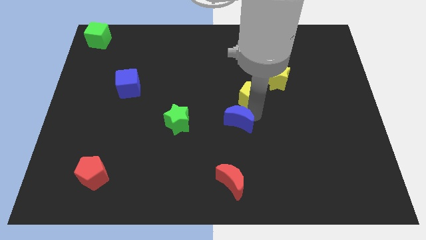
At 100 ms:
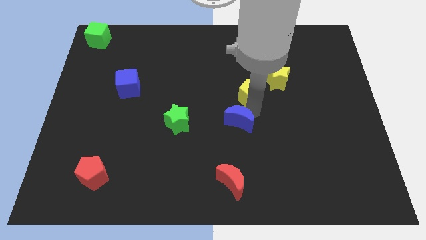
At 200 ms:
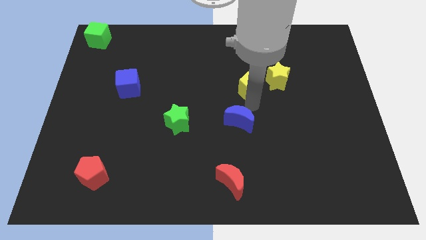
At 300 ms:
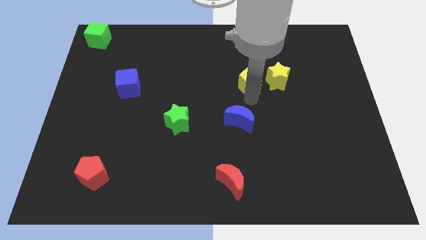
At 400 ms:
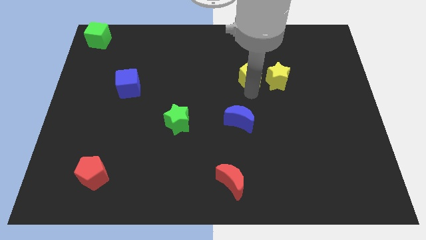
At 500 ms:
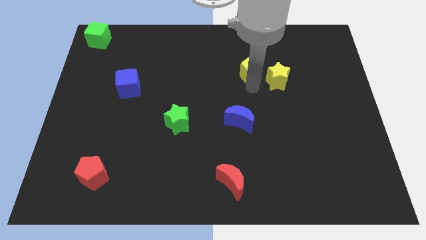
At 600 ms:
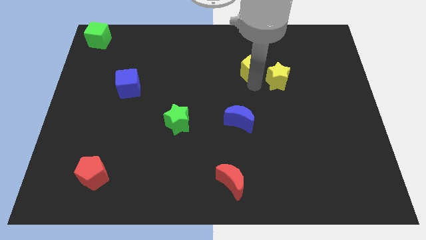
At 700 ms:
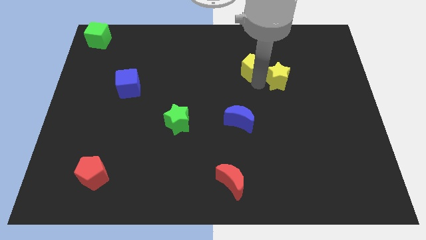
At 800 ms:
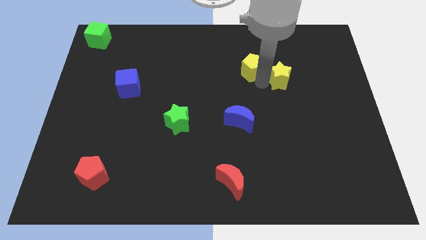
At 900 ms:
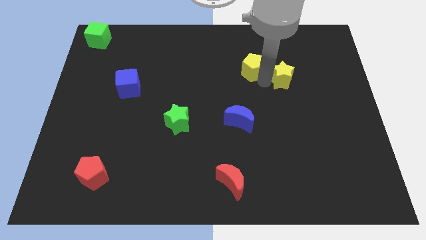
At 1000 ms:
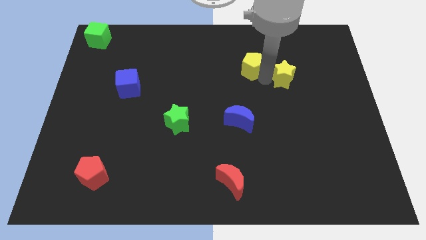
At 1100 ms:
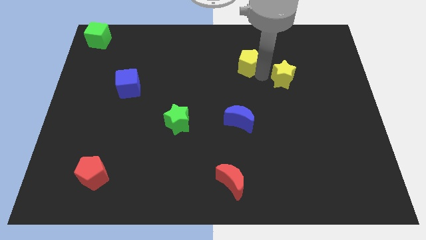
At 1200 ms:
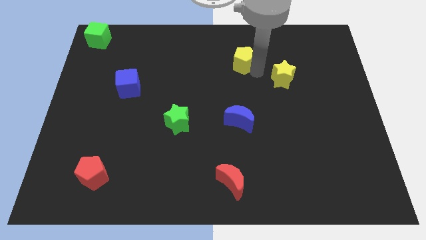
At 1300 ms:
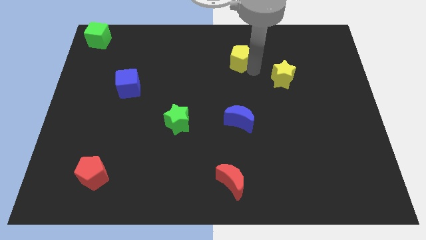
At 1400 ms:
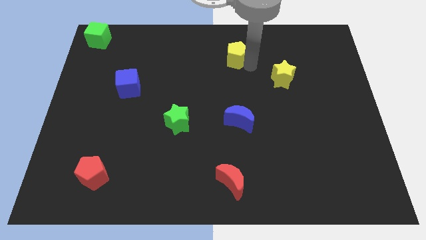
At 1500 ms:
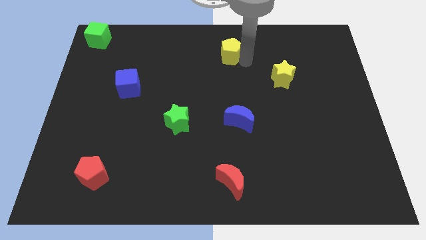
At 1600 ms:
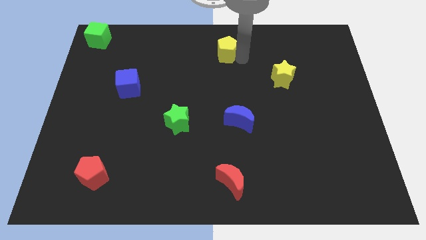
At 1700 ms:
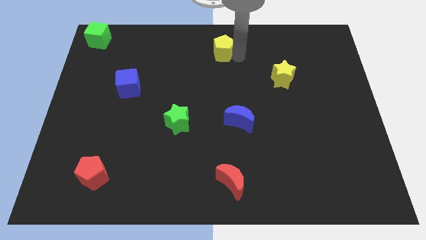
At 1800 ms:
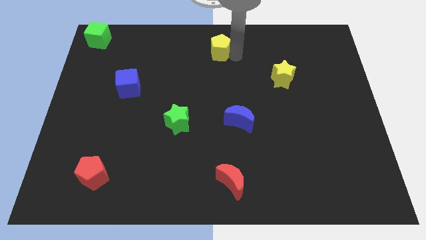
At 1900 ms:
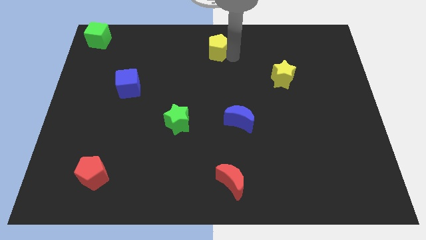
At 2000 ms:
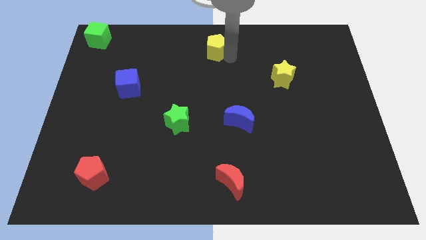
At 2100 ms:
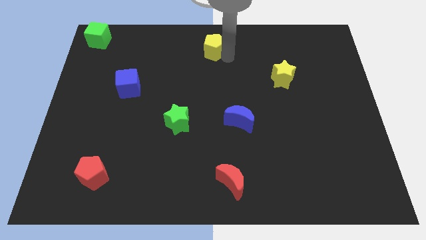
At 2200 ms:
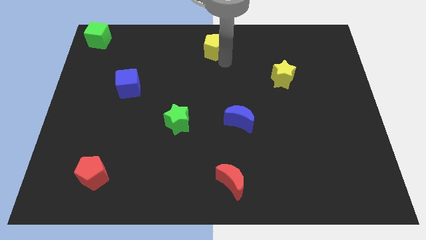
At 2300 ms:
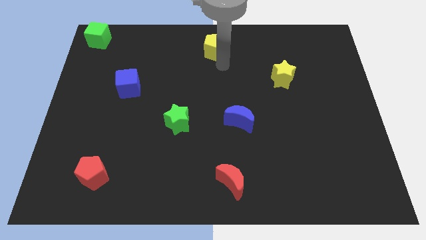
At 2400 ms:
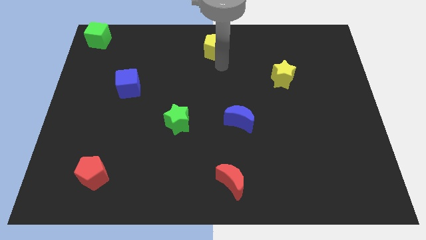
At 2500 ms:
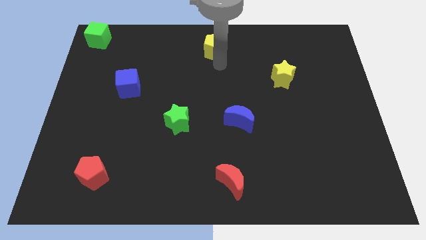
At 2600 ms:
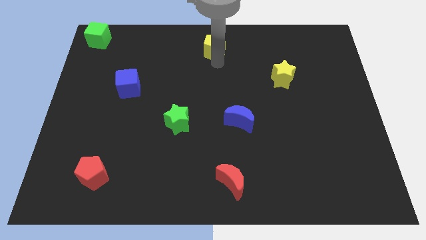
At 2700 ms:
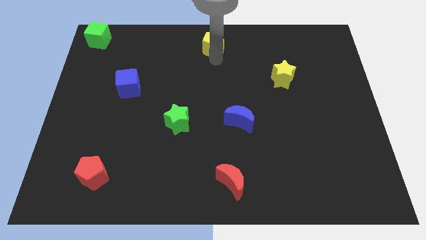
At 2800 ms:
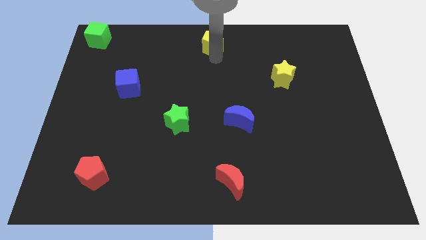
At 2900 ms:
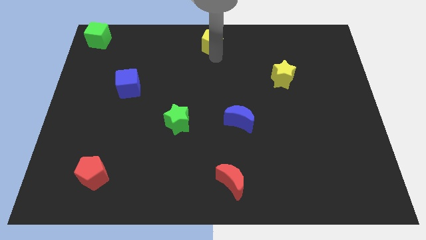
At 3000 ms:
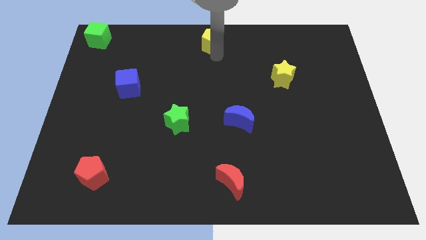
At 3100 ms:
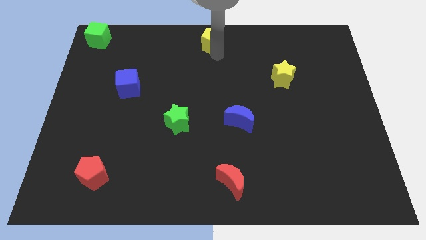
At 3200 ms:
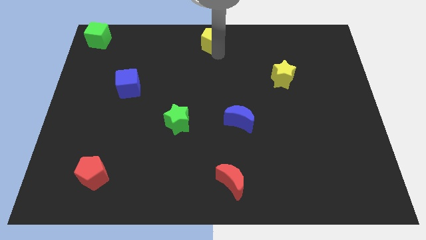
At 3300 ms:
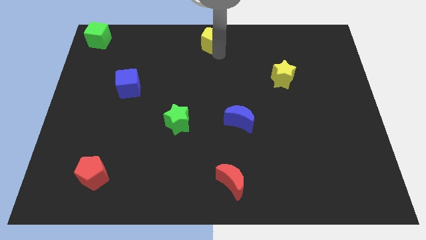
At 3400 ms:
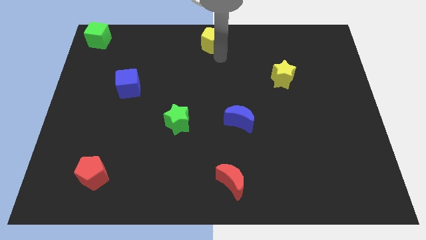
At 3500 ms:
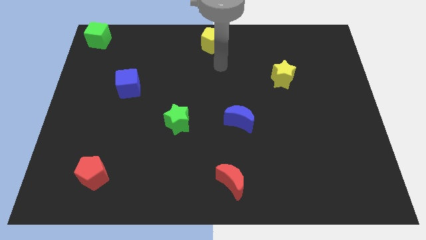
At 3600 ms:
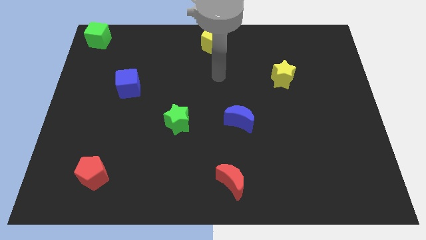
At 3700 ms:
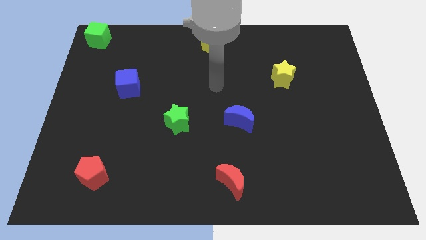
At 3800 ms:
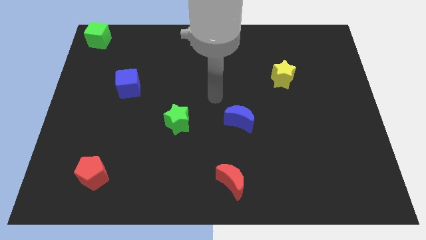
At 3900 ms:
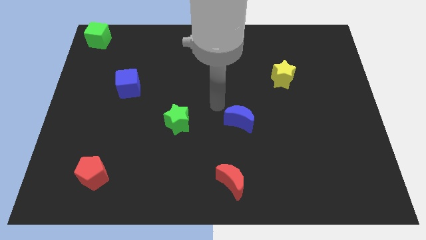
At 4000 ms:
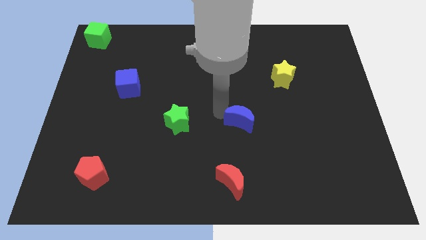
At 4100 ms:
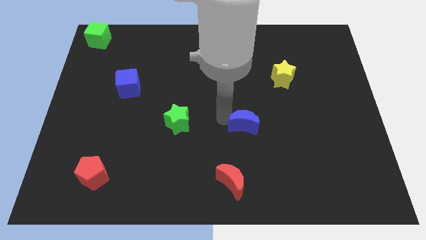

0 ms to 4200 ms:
push yellow pentagon towards top center

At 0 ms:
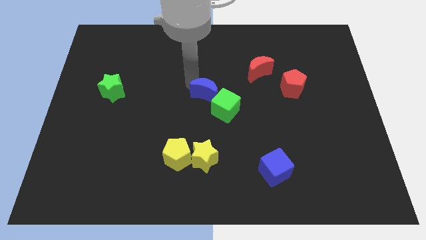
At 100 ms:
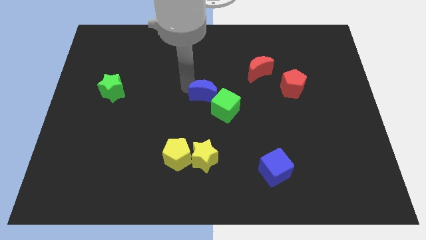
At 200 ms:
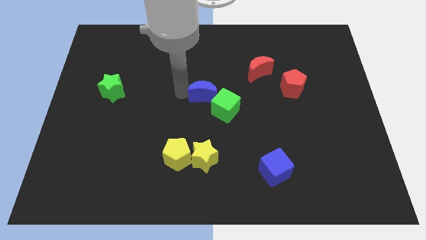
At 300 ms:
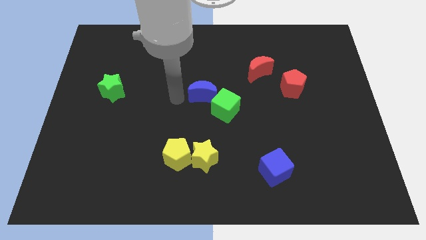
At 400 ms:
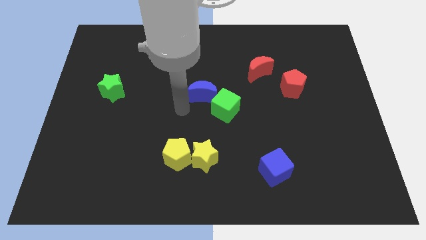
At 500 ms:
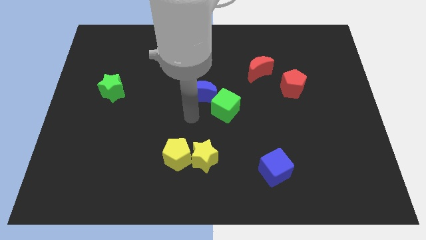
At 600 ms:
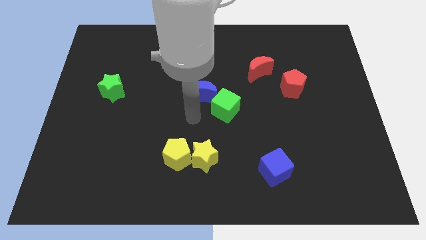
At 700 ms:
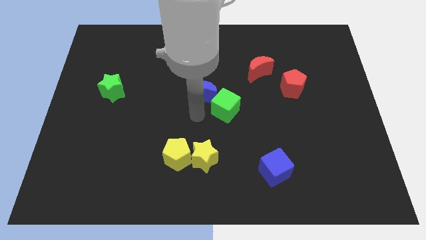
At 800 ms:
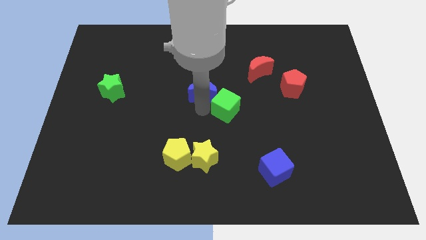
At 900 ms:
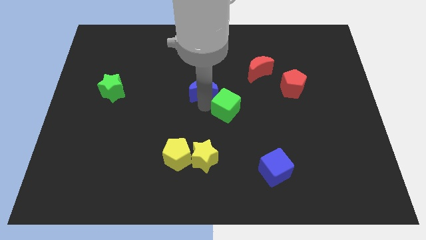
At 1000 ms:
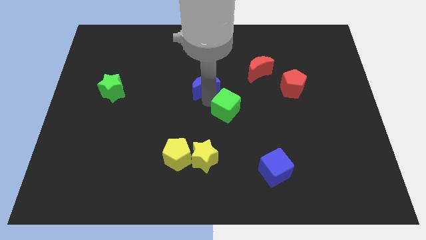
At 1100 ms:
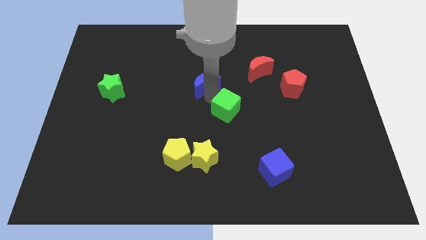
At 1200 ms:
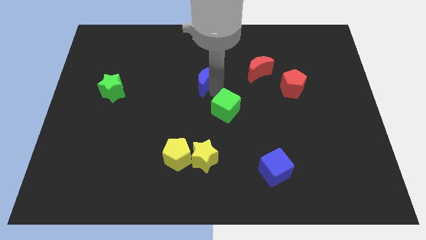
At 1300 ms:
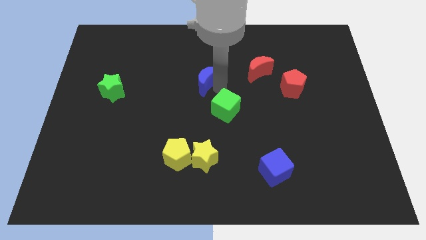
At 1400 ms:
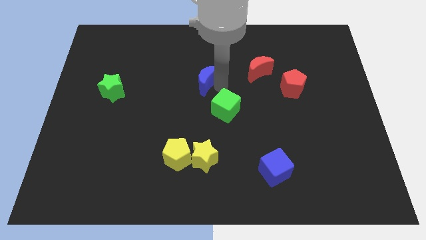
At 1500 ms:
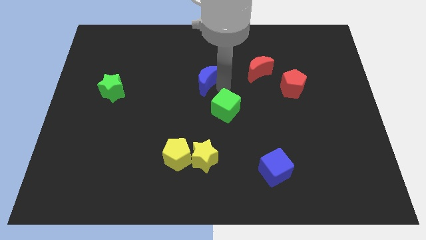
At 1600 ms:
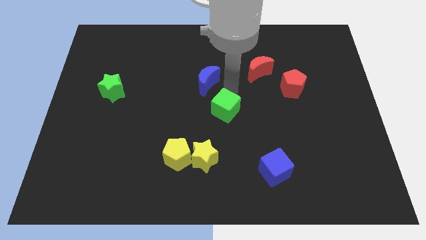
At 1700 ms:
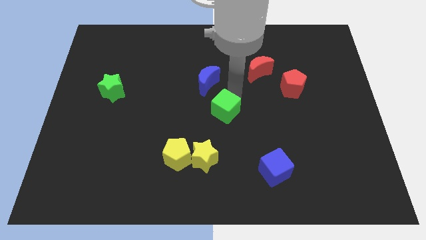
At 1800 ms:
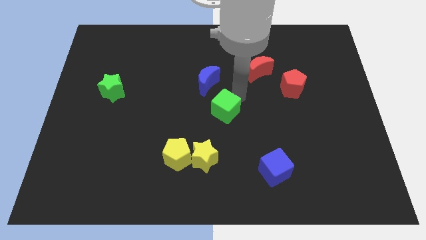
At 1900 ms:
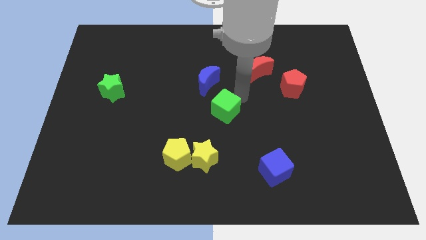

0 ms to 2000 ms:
separate the blue crescent from the green cube

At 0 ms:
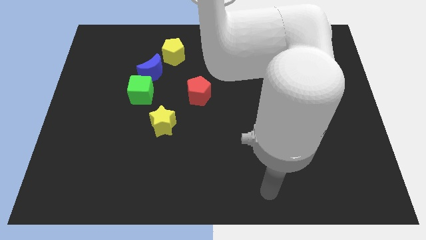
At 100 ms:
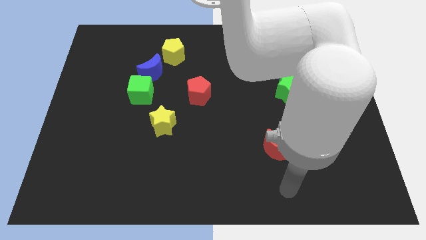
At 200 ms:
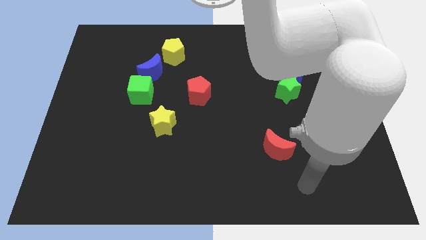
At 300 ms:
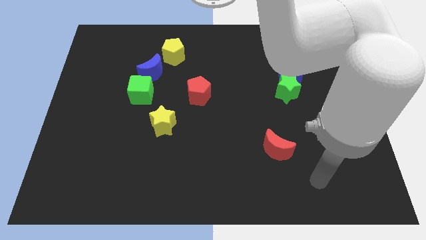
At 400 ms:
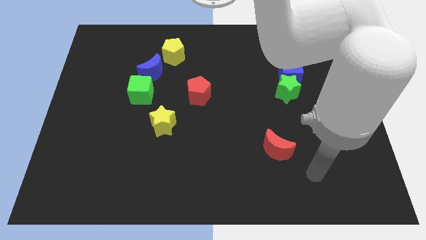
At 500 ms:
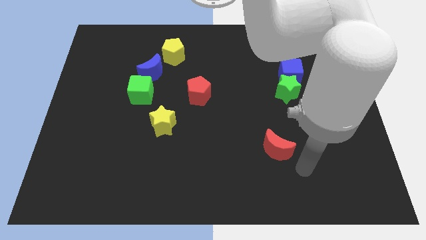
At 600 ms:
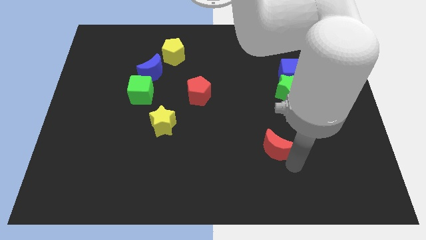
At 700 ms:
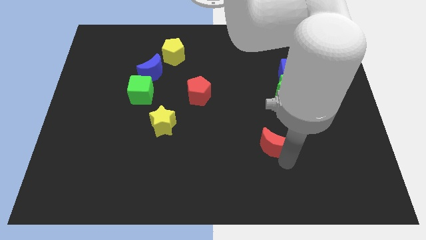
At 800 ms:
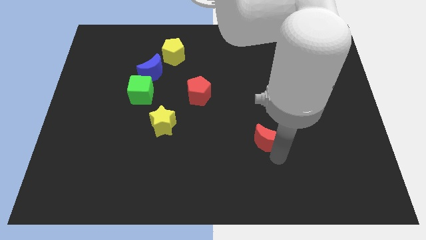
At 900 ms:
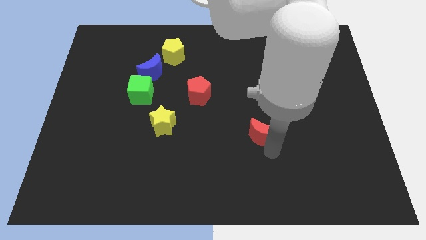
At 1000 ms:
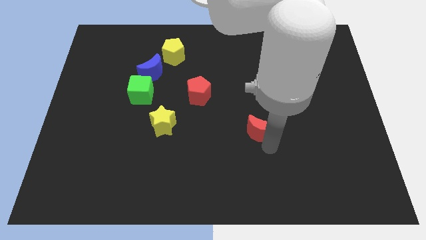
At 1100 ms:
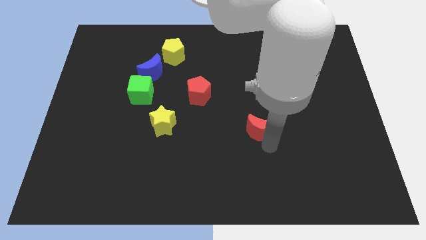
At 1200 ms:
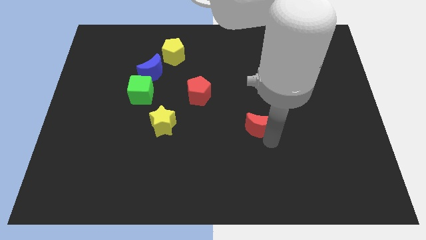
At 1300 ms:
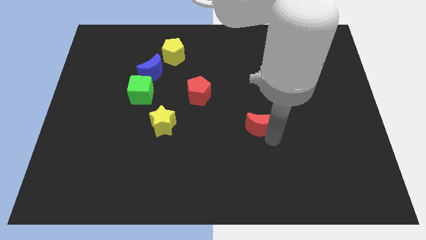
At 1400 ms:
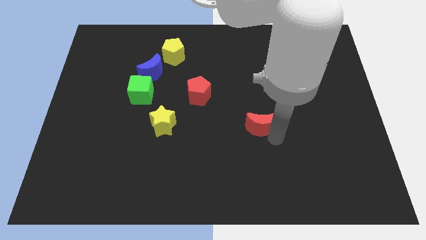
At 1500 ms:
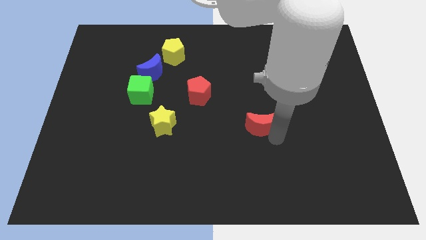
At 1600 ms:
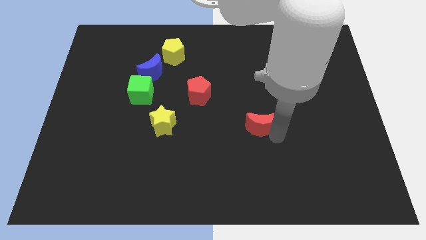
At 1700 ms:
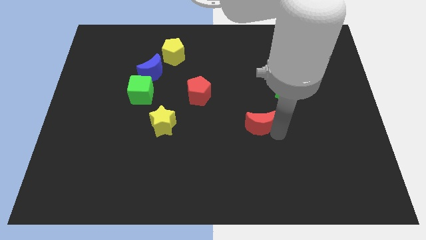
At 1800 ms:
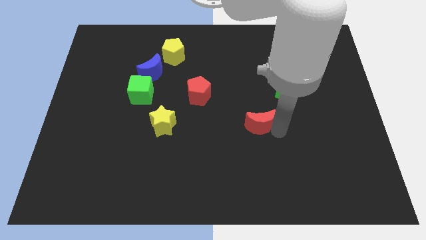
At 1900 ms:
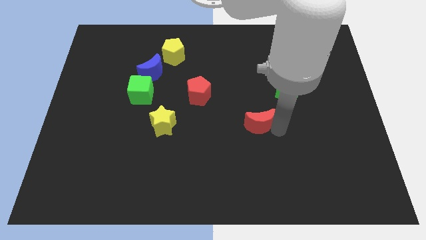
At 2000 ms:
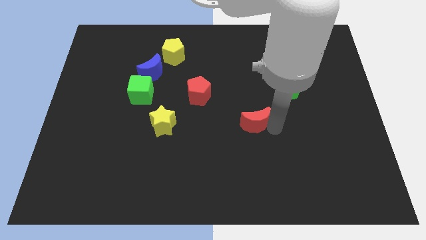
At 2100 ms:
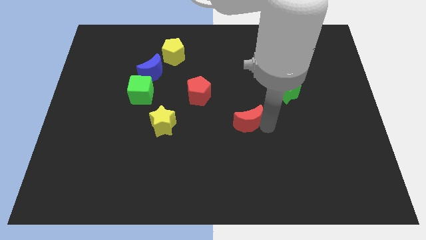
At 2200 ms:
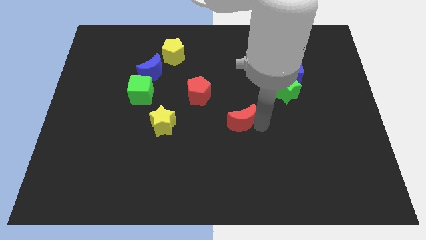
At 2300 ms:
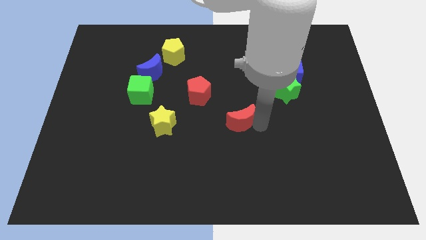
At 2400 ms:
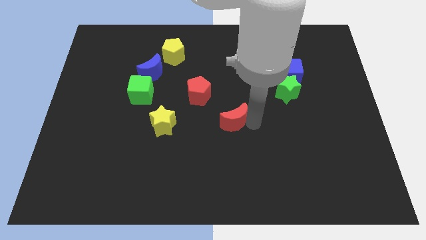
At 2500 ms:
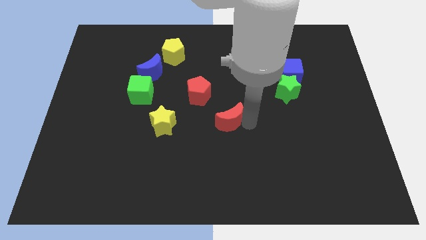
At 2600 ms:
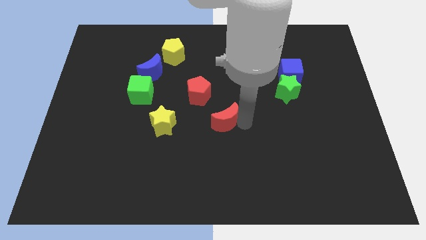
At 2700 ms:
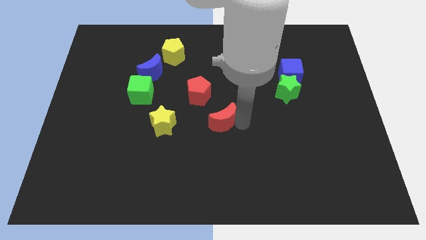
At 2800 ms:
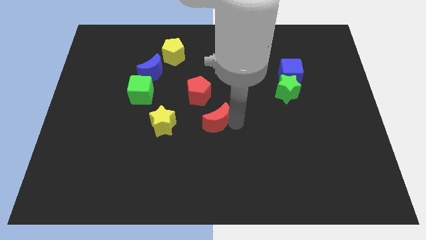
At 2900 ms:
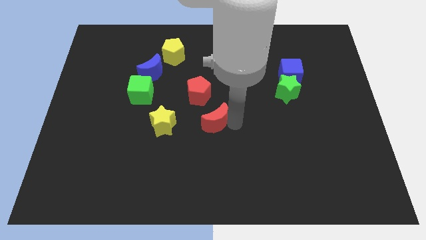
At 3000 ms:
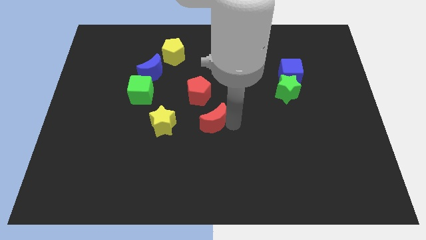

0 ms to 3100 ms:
drag the red crescent towards the red pentagon
